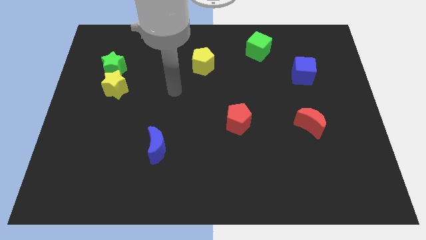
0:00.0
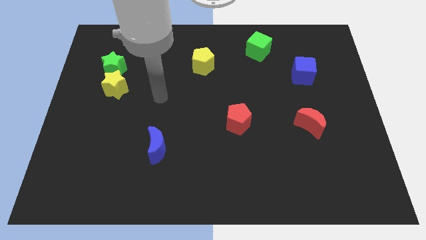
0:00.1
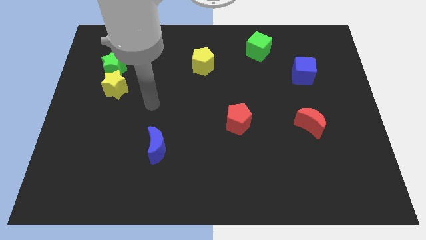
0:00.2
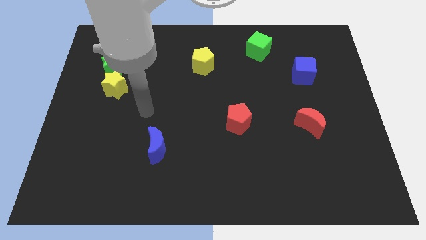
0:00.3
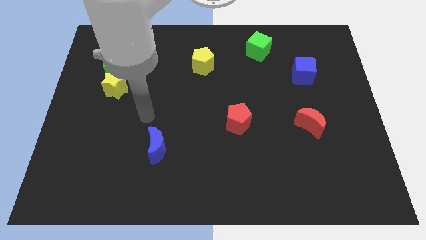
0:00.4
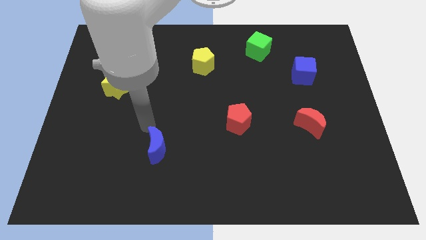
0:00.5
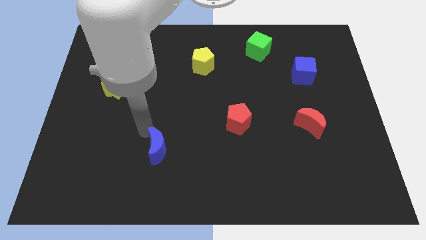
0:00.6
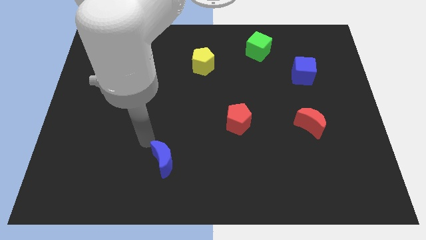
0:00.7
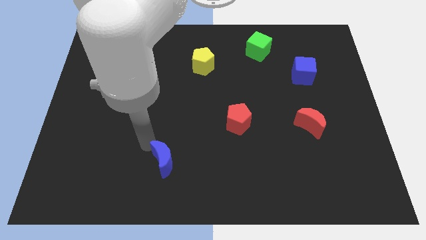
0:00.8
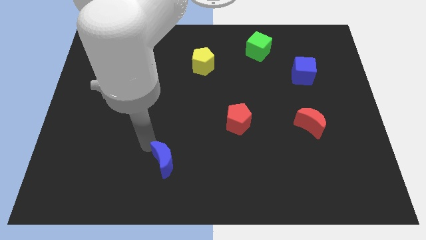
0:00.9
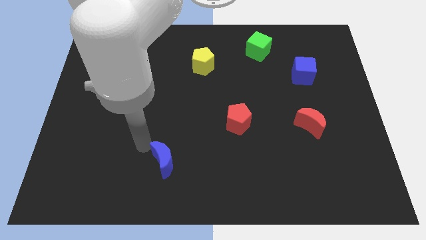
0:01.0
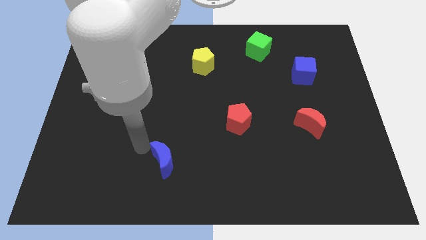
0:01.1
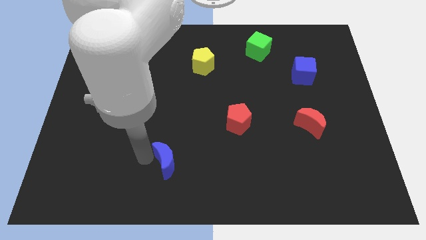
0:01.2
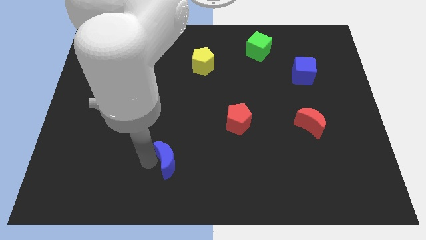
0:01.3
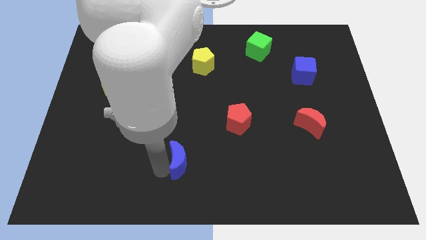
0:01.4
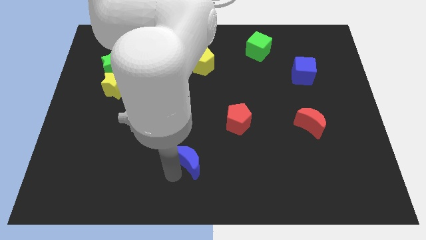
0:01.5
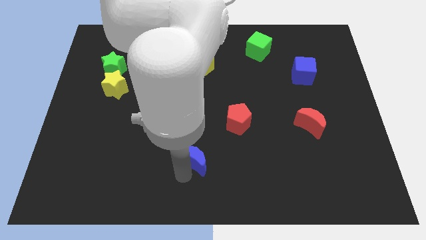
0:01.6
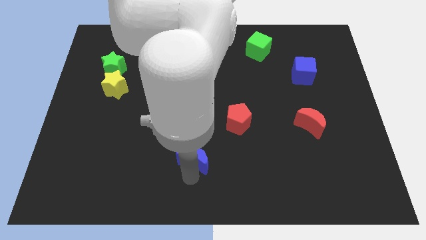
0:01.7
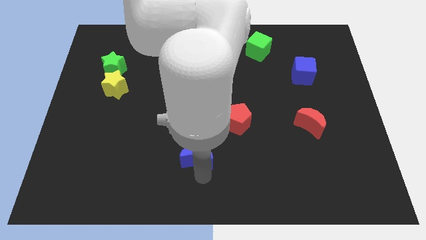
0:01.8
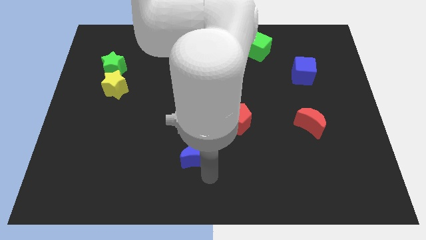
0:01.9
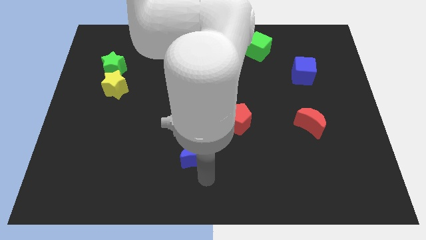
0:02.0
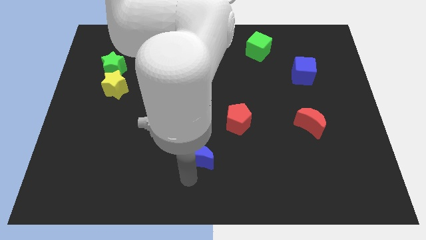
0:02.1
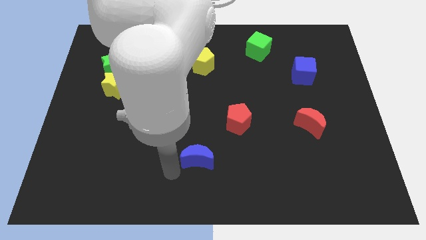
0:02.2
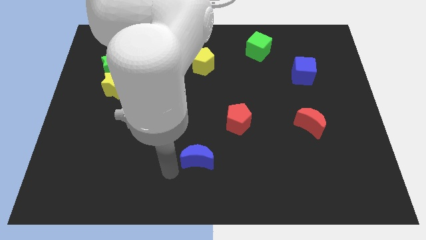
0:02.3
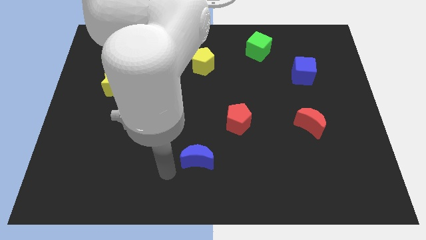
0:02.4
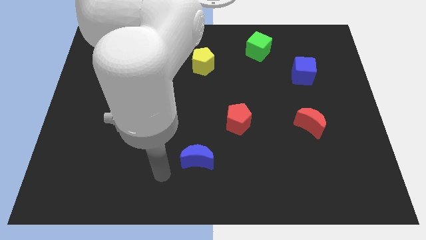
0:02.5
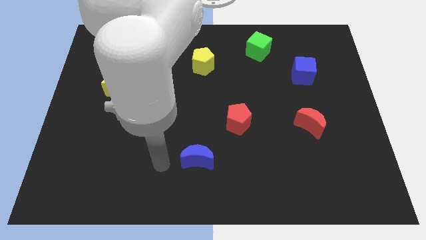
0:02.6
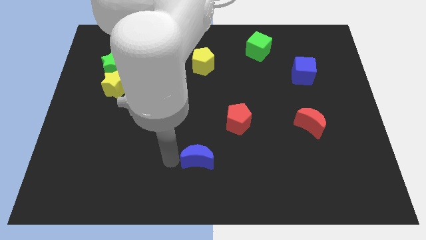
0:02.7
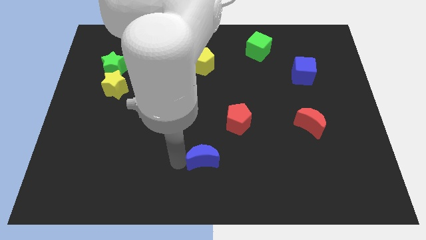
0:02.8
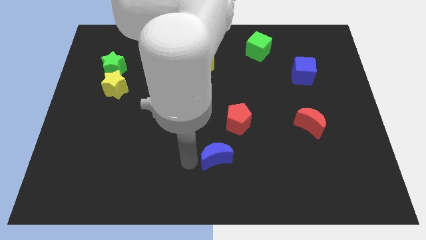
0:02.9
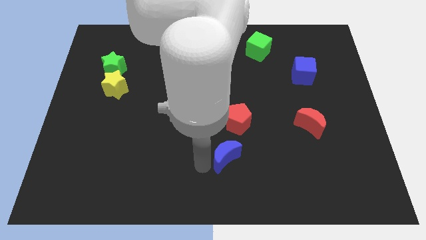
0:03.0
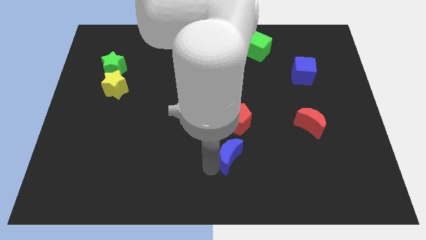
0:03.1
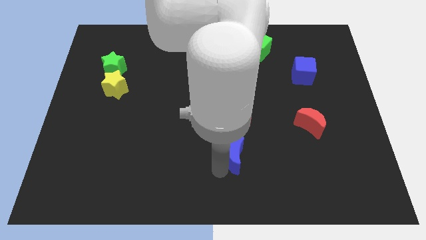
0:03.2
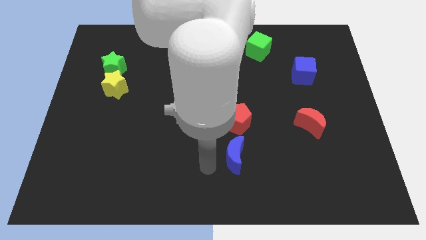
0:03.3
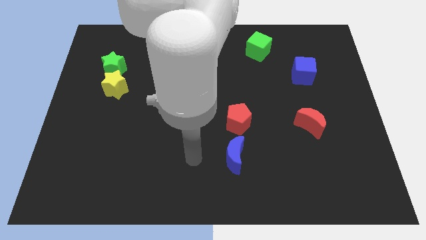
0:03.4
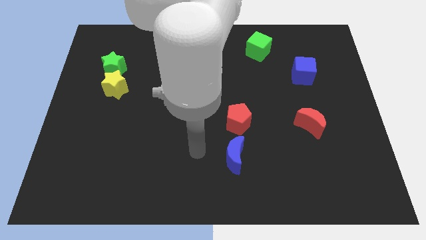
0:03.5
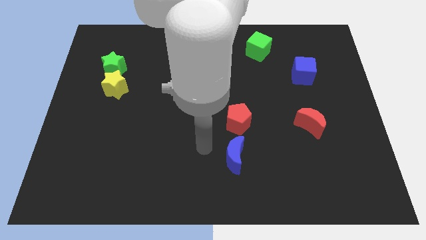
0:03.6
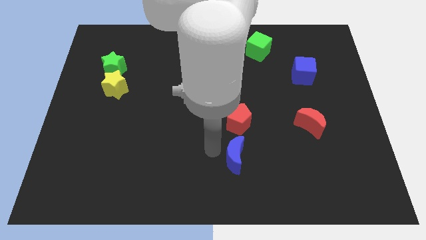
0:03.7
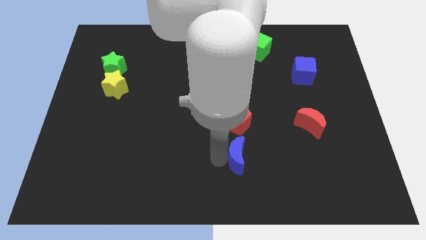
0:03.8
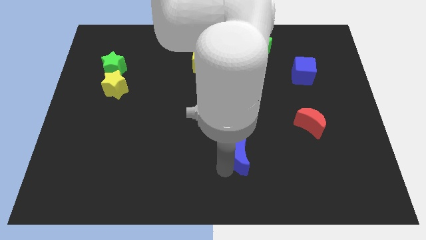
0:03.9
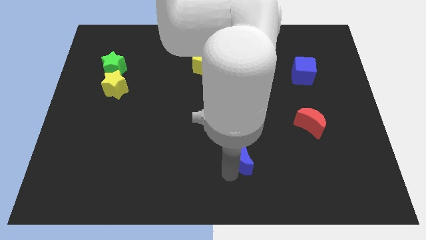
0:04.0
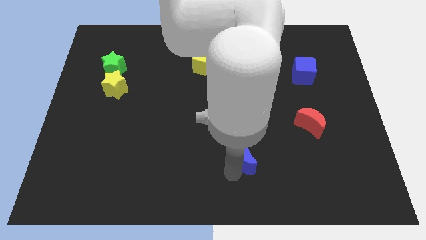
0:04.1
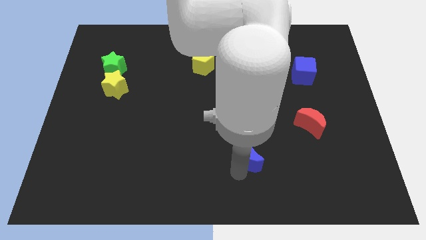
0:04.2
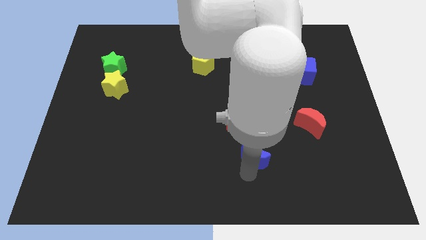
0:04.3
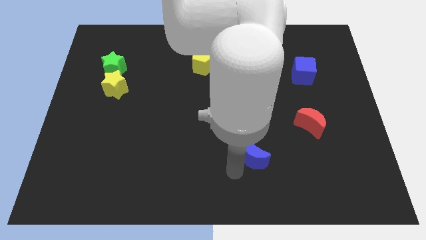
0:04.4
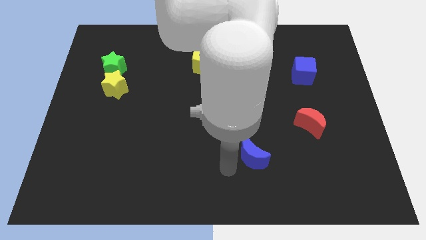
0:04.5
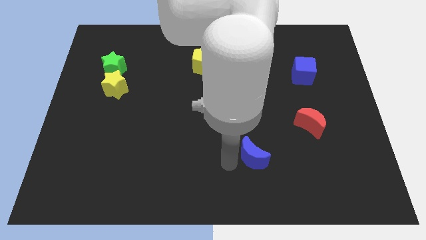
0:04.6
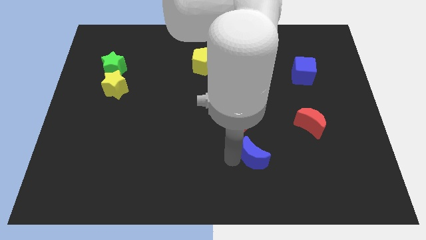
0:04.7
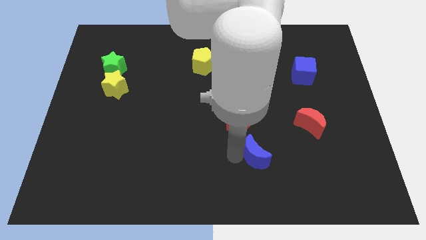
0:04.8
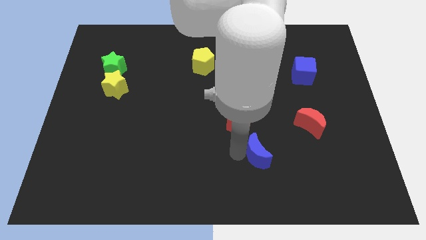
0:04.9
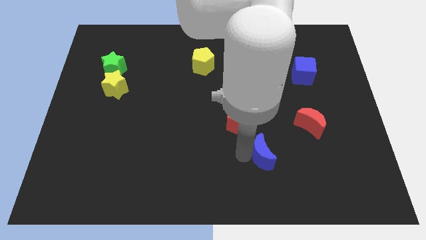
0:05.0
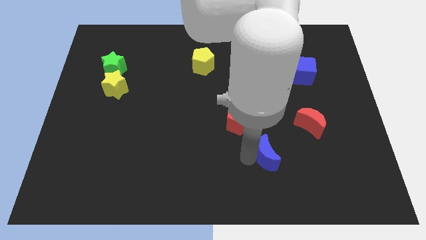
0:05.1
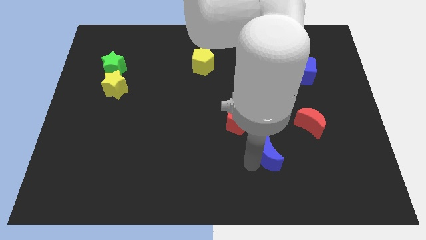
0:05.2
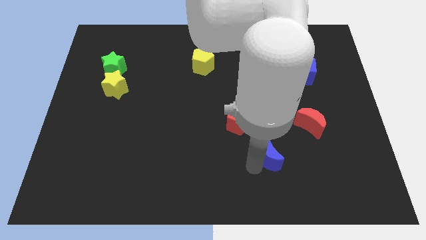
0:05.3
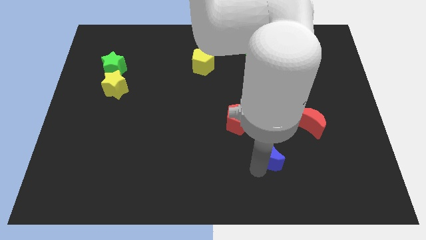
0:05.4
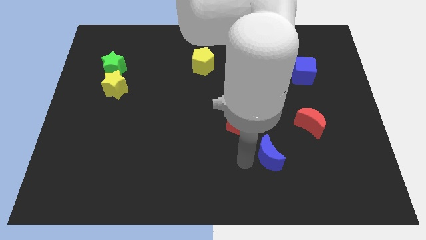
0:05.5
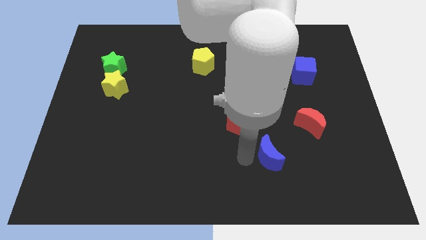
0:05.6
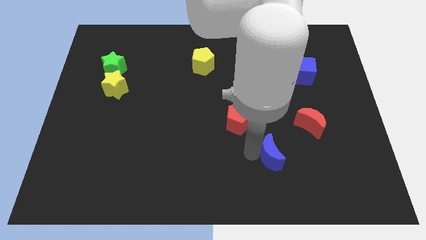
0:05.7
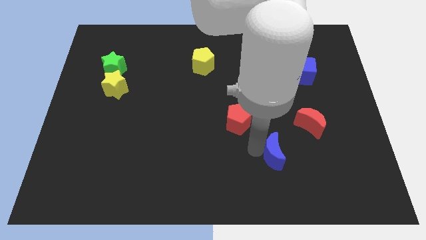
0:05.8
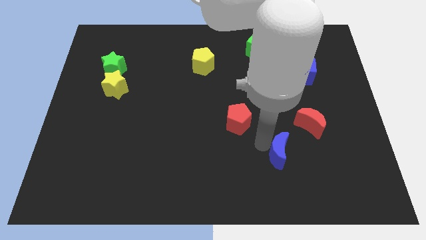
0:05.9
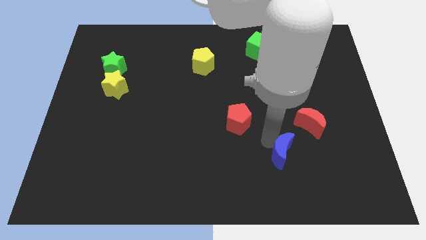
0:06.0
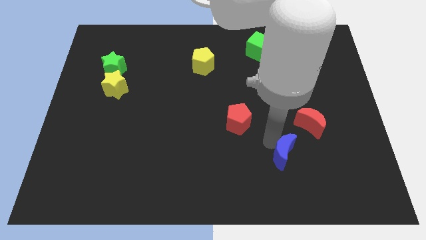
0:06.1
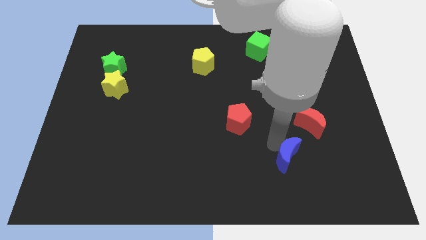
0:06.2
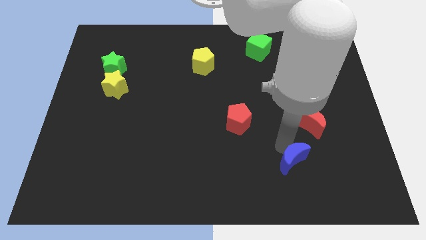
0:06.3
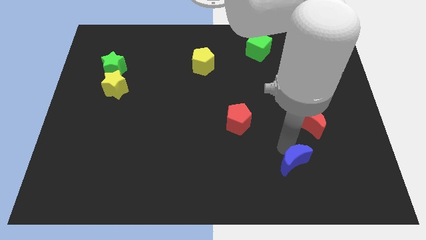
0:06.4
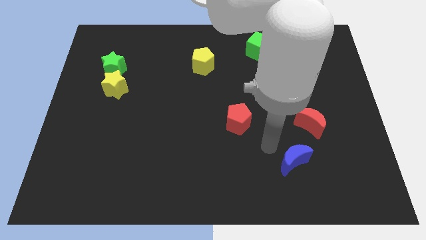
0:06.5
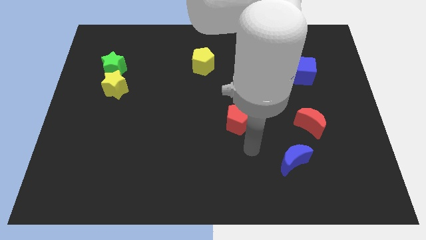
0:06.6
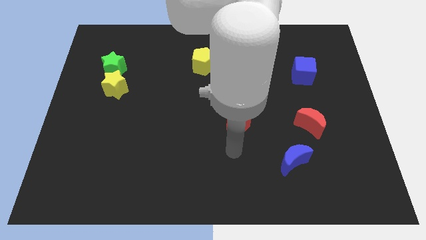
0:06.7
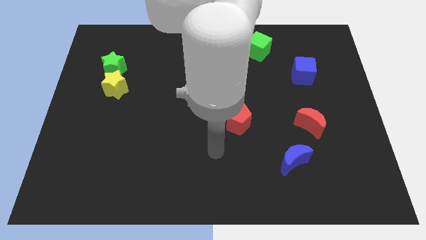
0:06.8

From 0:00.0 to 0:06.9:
place the blue crescent diagonally to the bottom right of the red pentagon

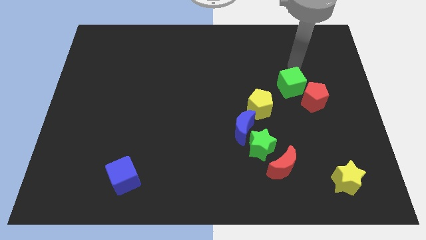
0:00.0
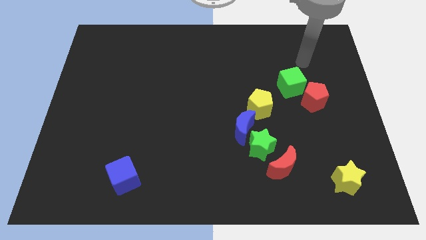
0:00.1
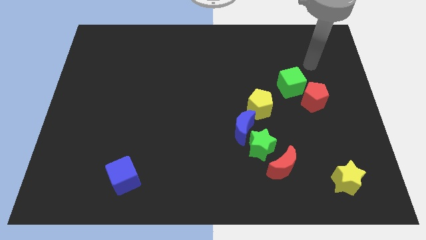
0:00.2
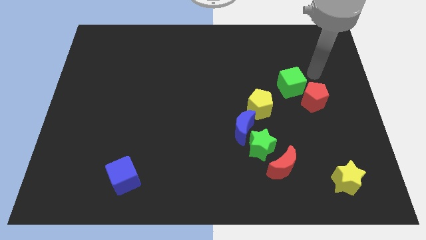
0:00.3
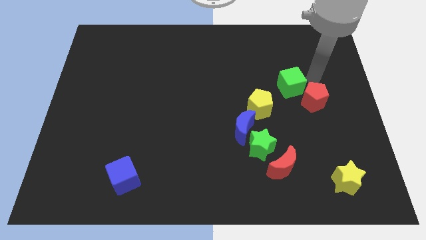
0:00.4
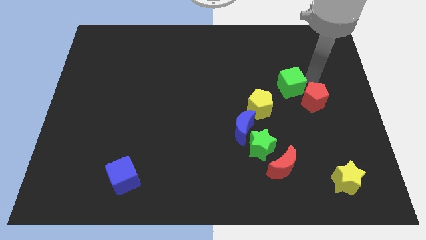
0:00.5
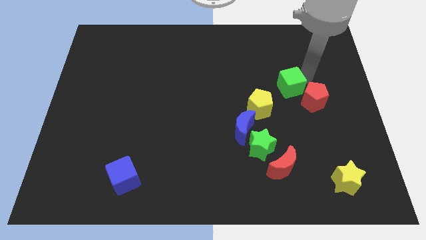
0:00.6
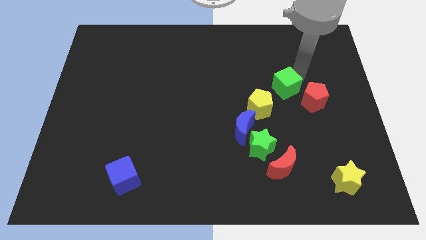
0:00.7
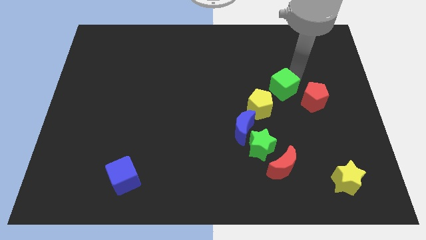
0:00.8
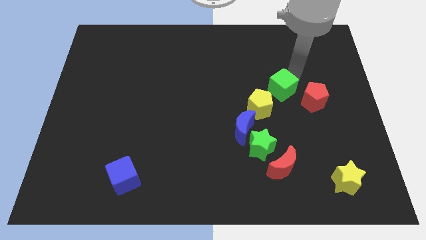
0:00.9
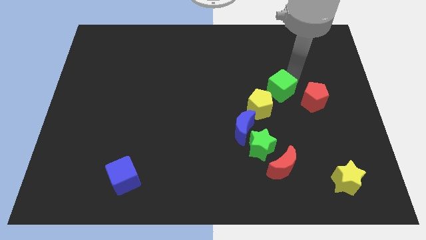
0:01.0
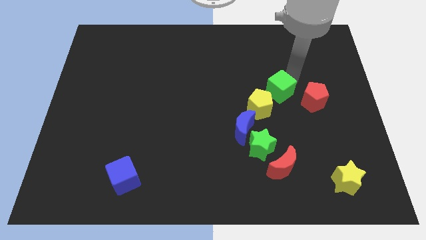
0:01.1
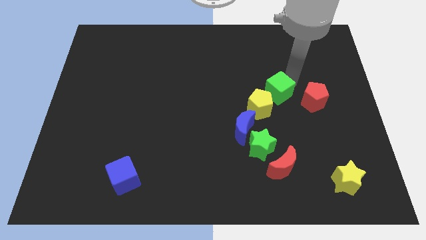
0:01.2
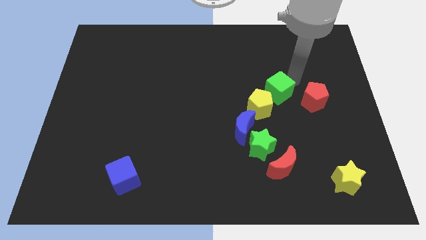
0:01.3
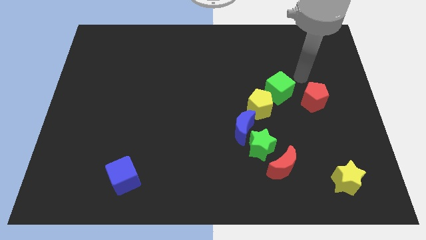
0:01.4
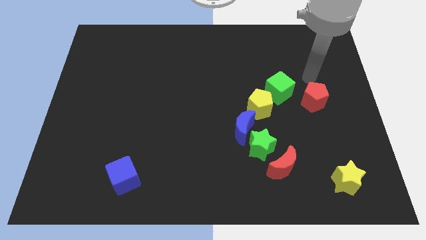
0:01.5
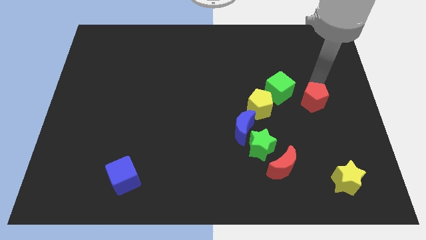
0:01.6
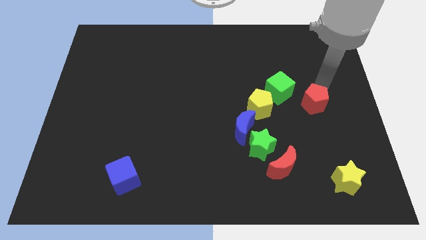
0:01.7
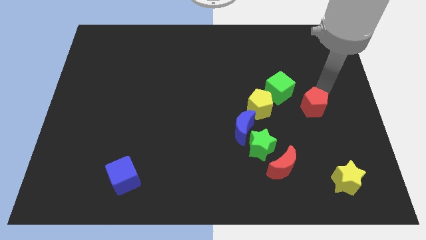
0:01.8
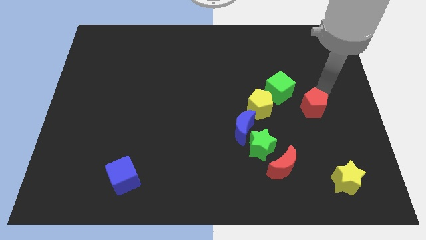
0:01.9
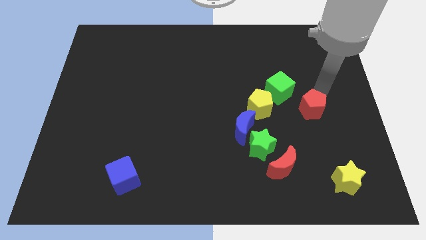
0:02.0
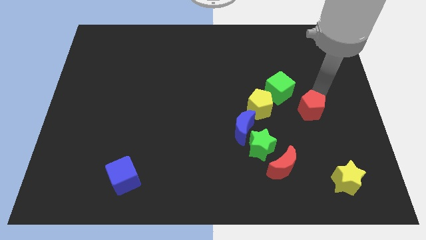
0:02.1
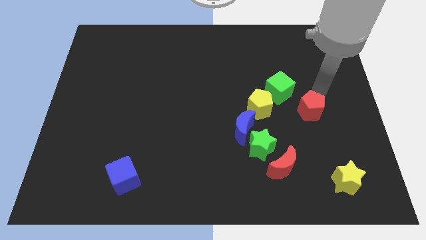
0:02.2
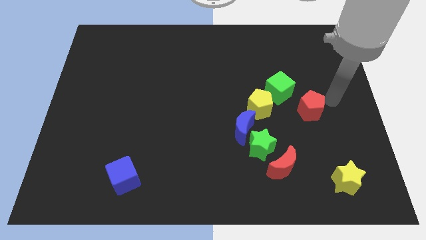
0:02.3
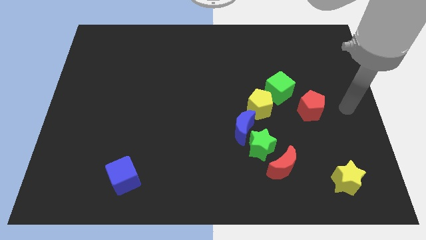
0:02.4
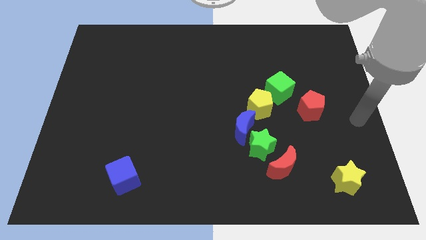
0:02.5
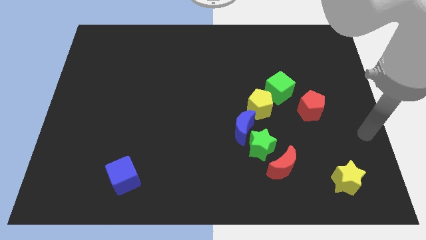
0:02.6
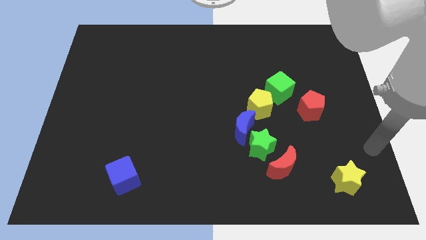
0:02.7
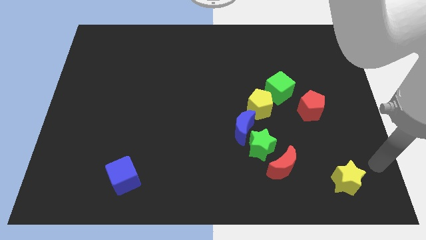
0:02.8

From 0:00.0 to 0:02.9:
slightly push the green cube and red pentagon to the center
